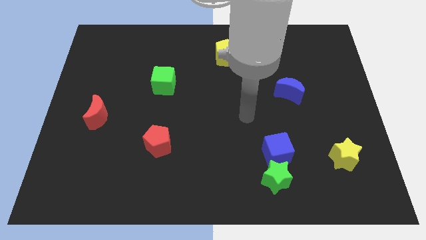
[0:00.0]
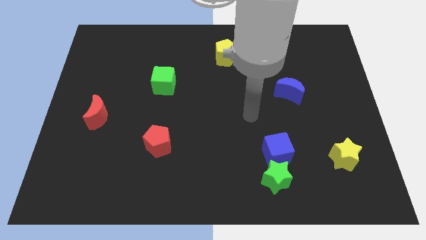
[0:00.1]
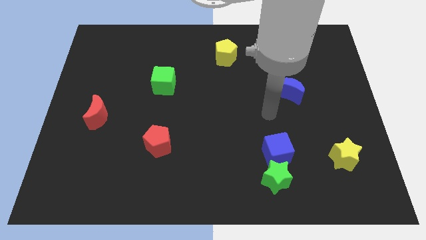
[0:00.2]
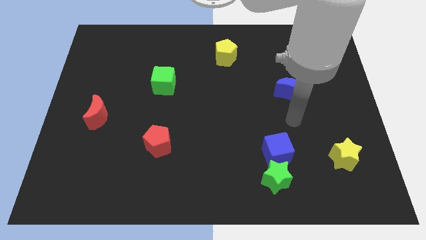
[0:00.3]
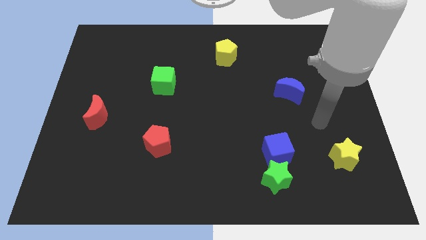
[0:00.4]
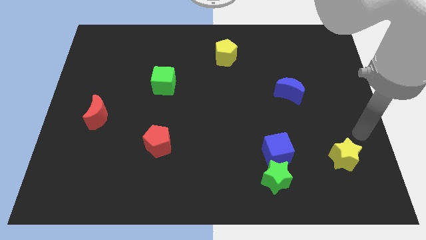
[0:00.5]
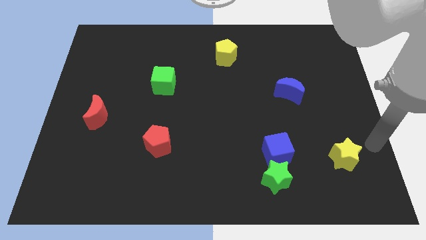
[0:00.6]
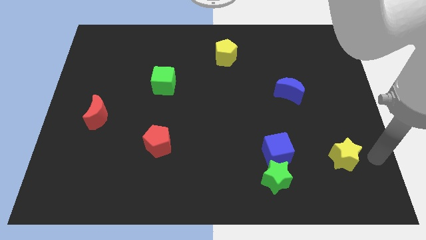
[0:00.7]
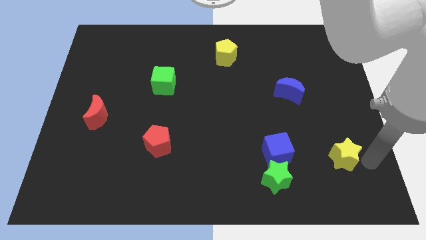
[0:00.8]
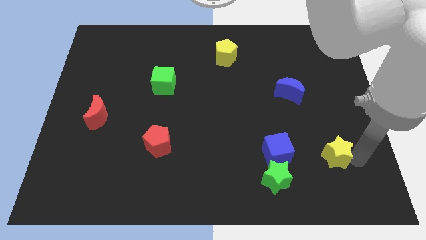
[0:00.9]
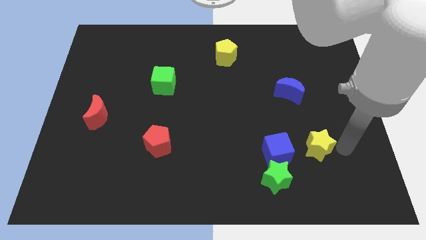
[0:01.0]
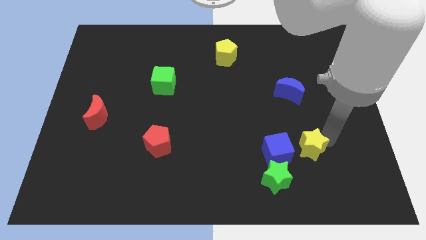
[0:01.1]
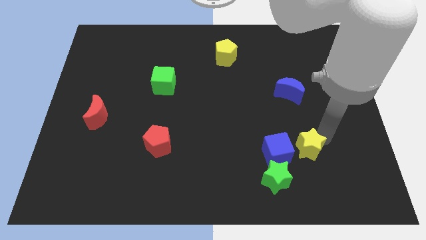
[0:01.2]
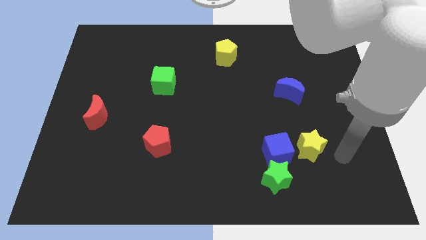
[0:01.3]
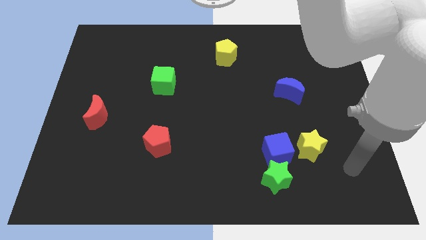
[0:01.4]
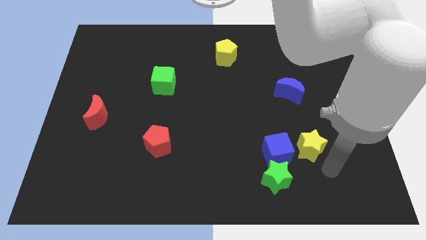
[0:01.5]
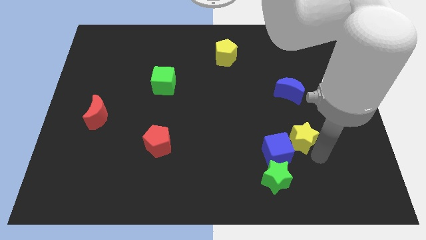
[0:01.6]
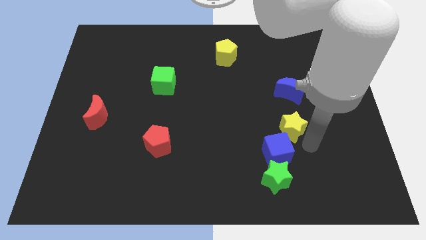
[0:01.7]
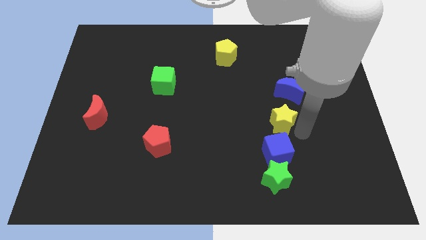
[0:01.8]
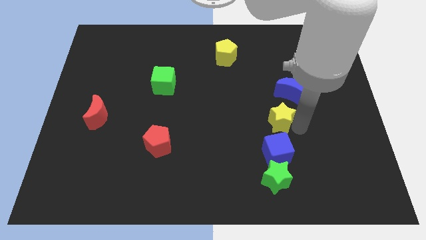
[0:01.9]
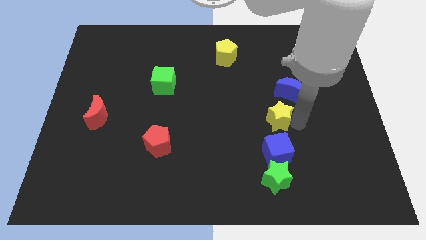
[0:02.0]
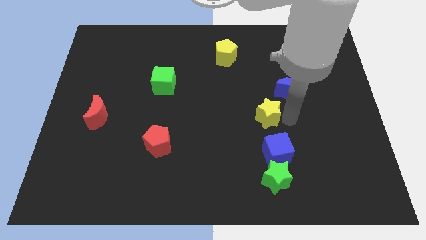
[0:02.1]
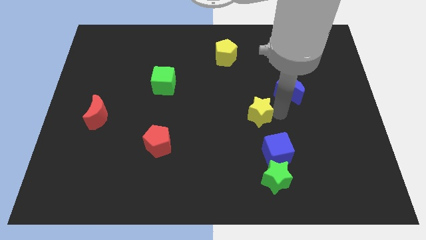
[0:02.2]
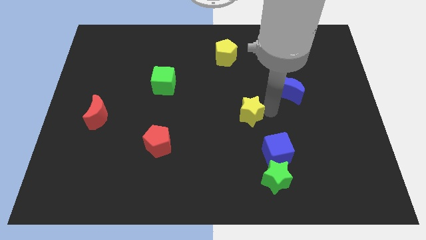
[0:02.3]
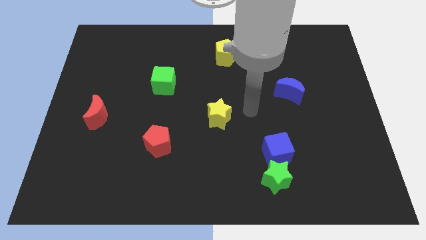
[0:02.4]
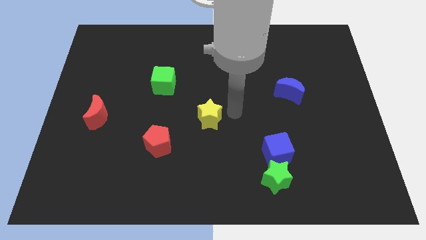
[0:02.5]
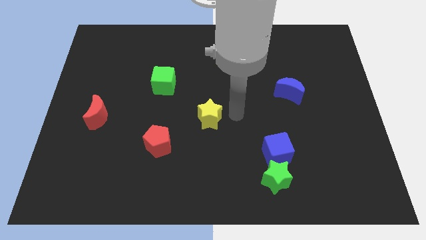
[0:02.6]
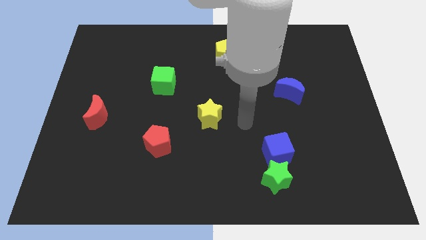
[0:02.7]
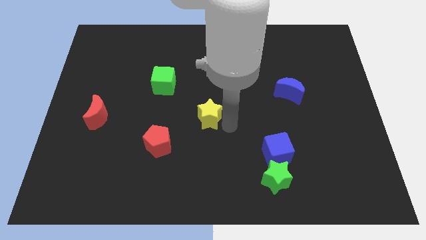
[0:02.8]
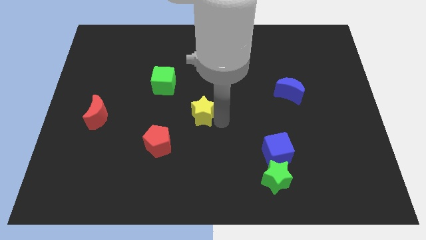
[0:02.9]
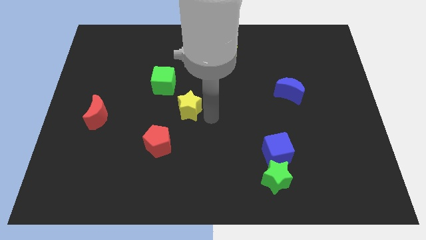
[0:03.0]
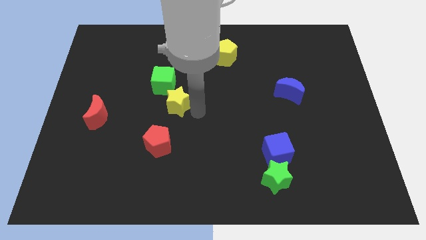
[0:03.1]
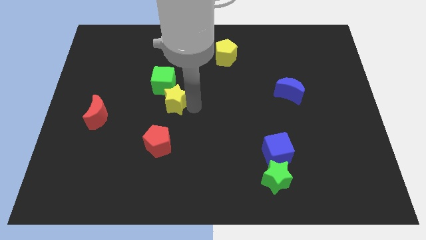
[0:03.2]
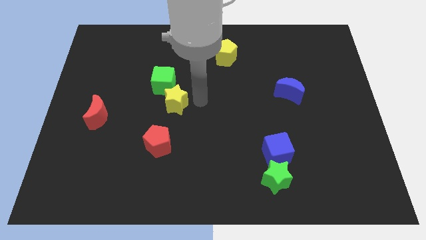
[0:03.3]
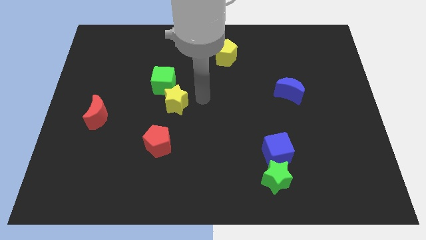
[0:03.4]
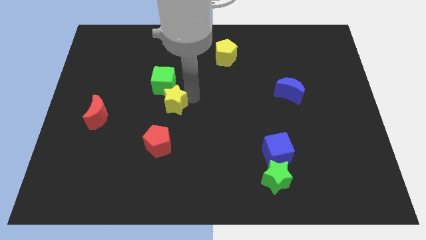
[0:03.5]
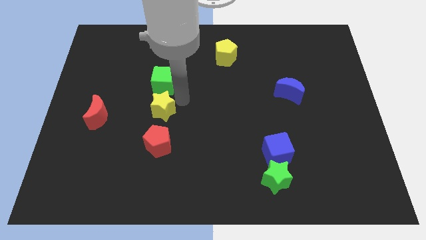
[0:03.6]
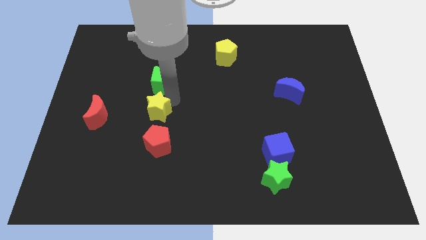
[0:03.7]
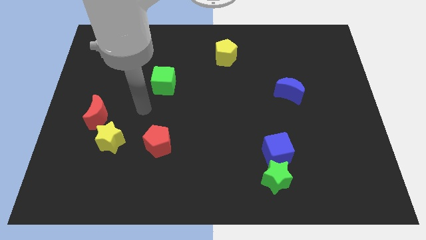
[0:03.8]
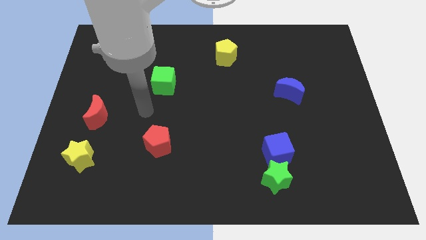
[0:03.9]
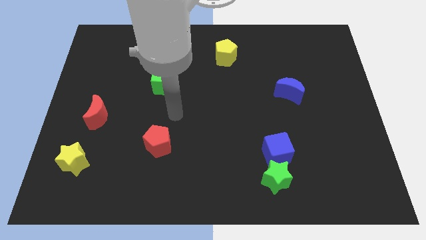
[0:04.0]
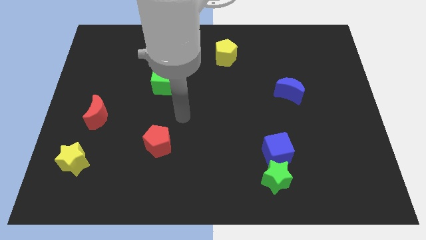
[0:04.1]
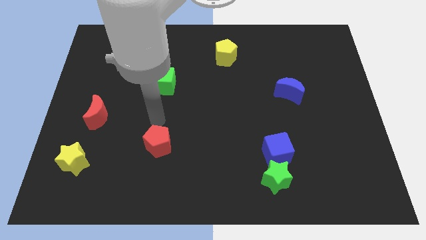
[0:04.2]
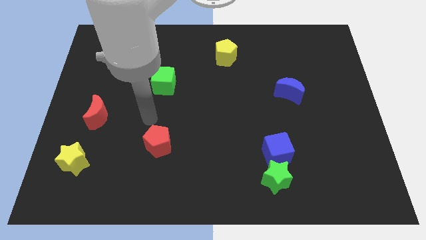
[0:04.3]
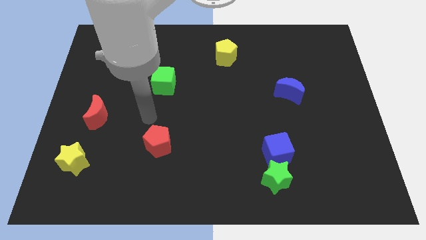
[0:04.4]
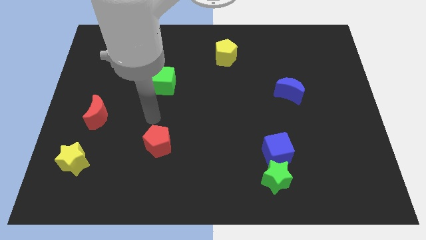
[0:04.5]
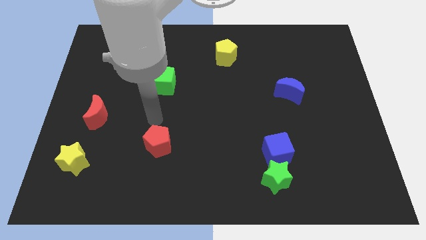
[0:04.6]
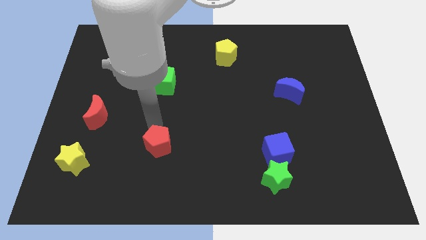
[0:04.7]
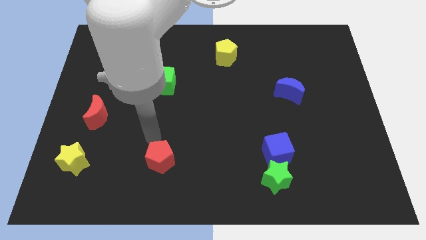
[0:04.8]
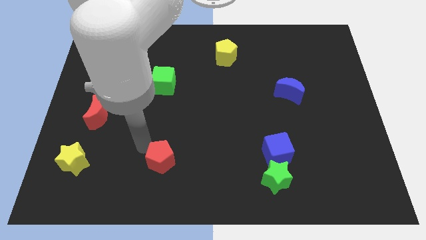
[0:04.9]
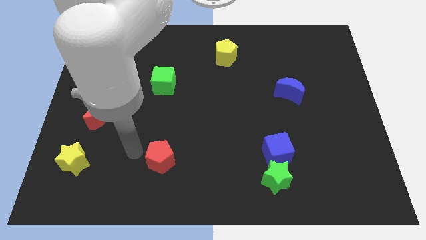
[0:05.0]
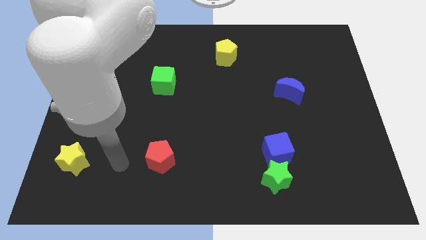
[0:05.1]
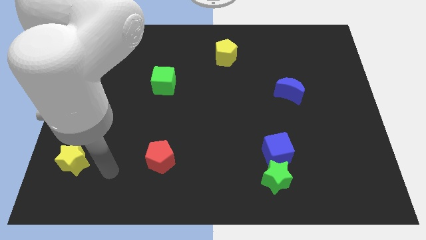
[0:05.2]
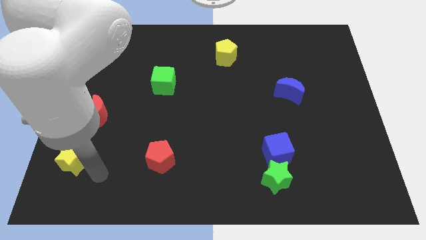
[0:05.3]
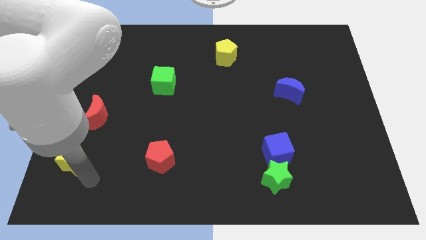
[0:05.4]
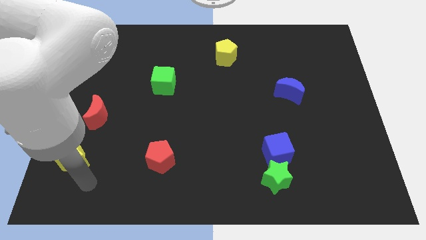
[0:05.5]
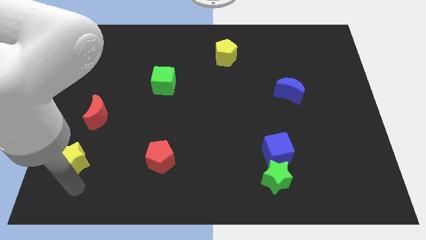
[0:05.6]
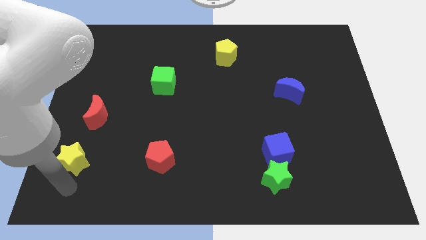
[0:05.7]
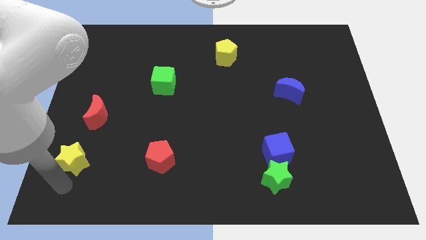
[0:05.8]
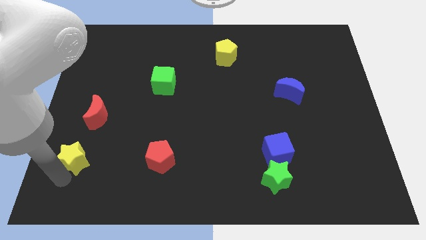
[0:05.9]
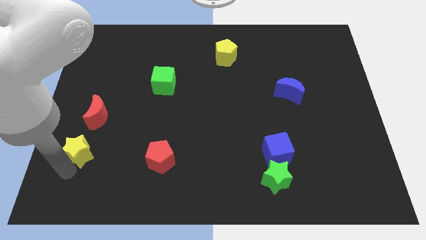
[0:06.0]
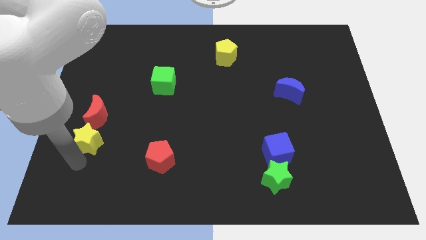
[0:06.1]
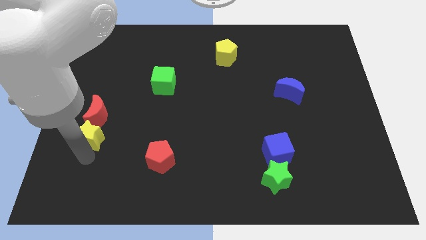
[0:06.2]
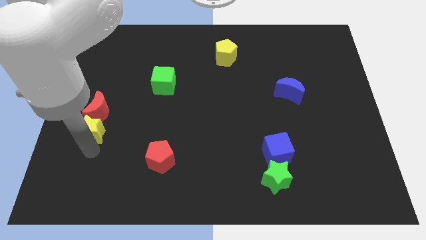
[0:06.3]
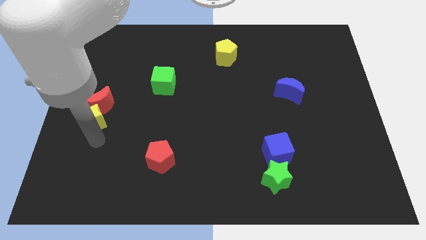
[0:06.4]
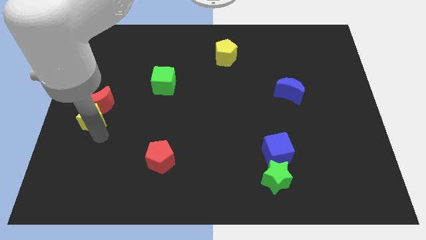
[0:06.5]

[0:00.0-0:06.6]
push the yellow star close to the red moon

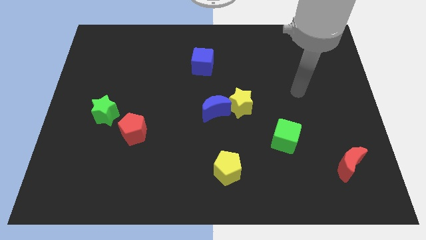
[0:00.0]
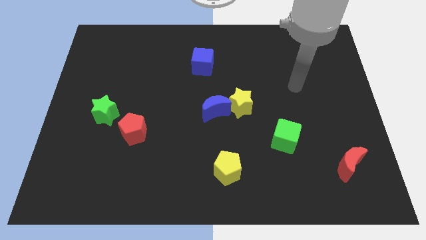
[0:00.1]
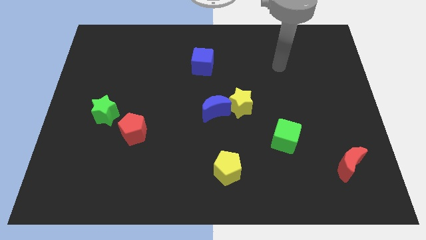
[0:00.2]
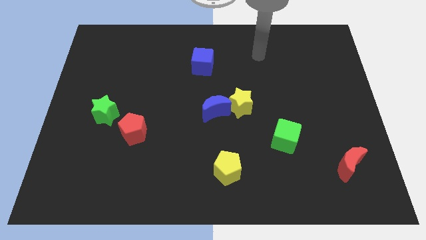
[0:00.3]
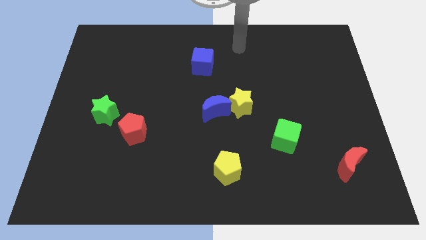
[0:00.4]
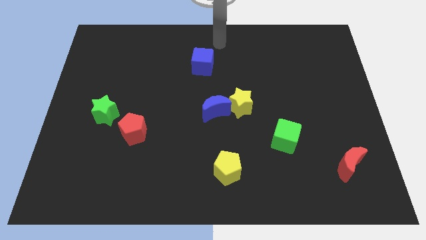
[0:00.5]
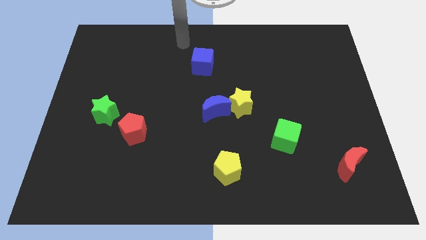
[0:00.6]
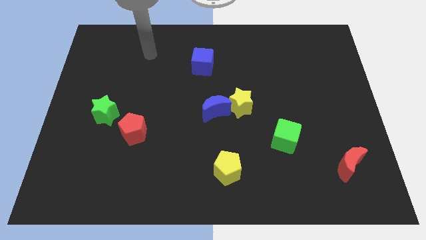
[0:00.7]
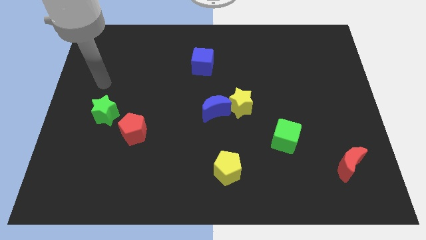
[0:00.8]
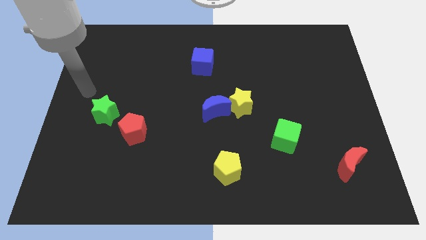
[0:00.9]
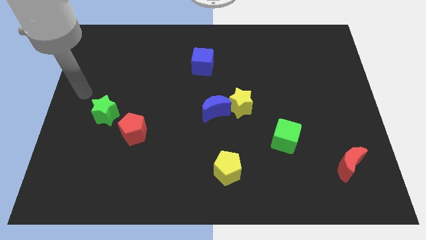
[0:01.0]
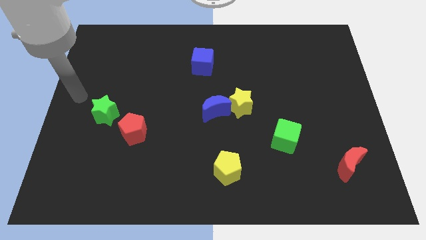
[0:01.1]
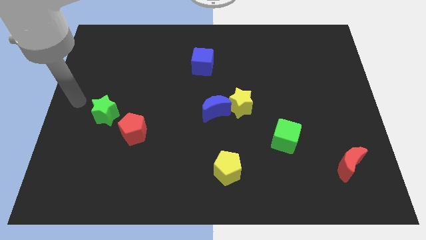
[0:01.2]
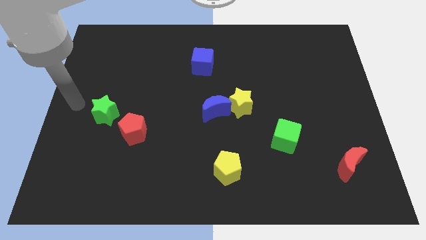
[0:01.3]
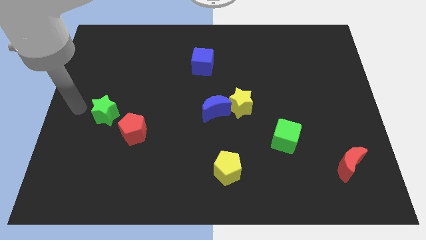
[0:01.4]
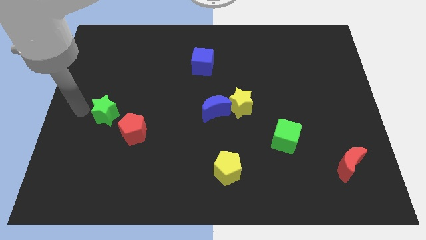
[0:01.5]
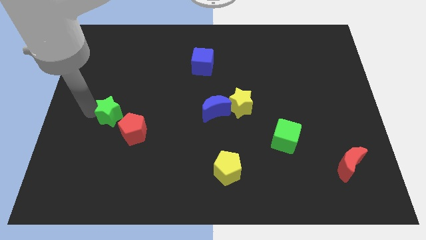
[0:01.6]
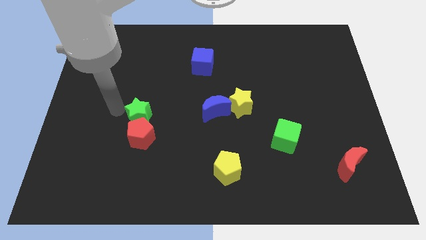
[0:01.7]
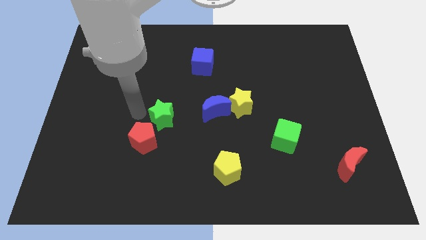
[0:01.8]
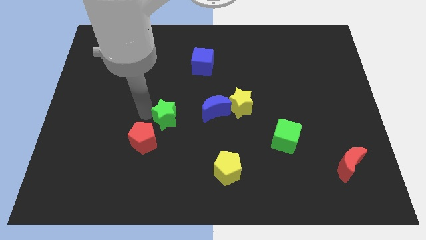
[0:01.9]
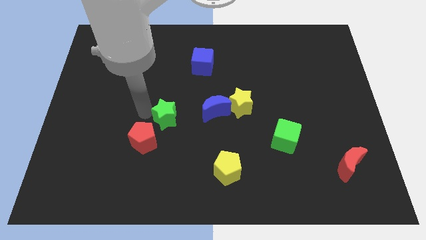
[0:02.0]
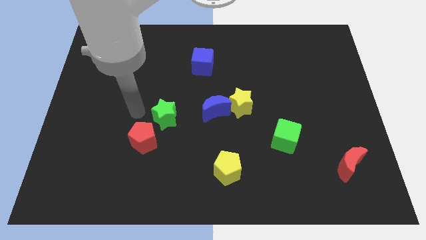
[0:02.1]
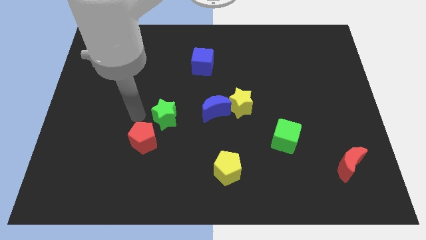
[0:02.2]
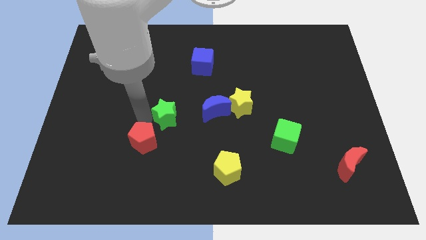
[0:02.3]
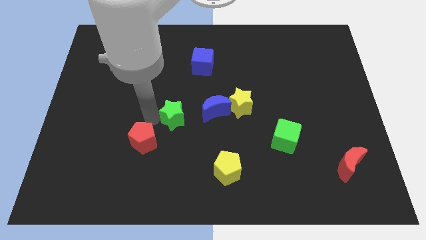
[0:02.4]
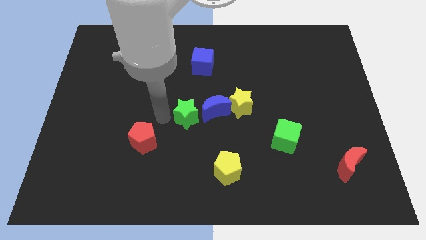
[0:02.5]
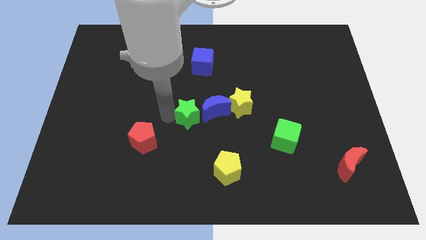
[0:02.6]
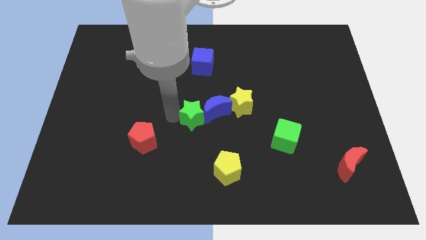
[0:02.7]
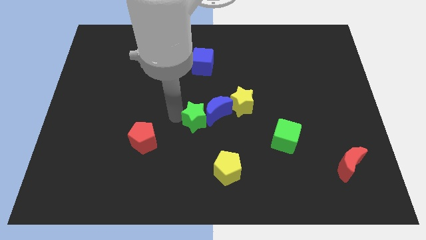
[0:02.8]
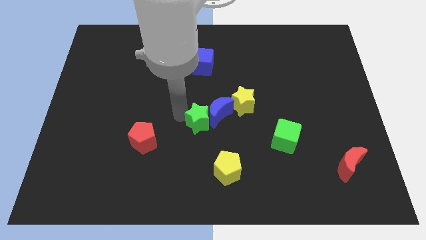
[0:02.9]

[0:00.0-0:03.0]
put the green star next to the blue moon
